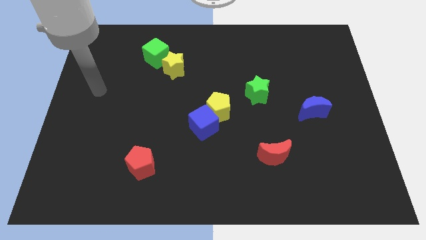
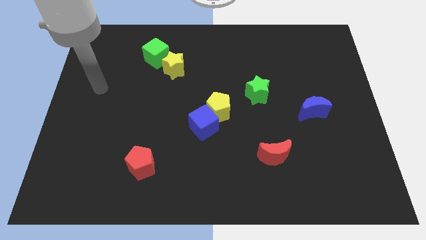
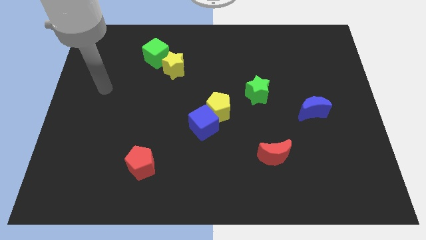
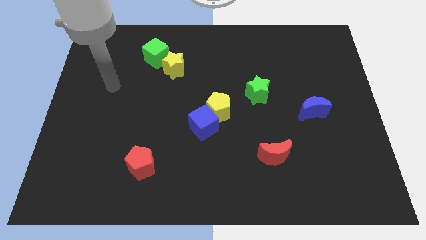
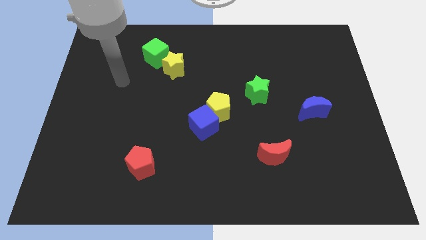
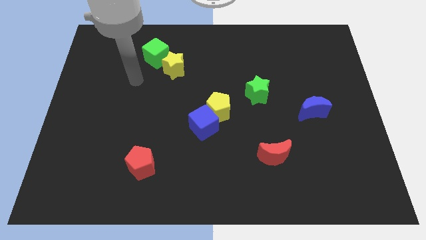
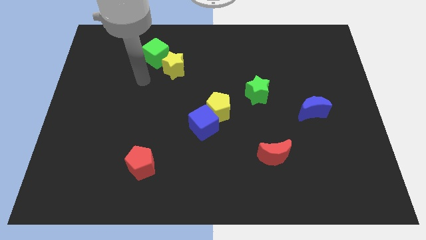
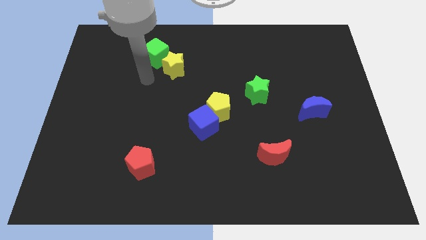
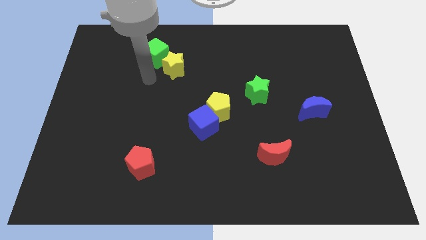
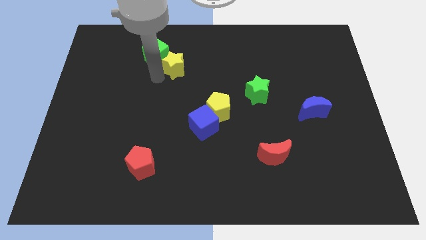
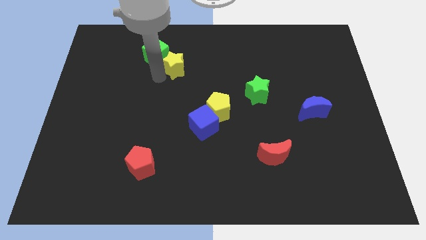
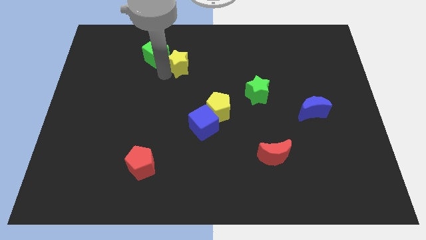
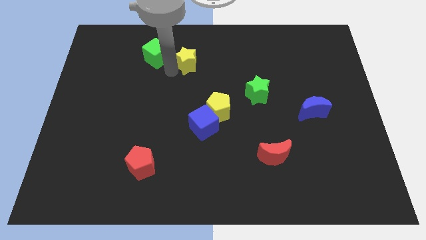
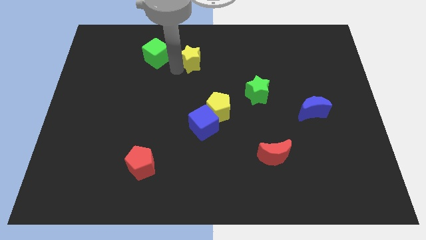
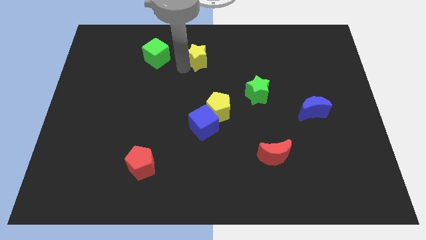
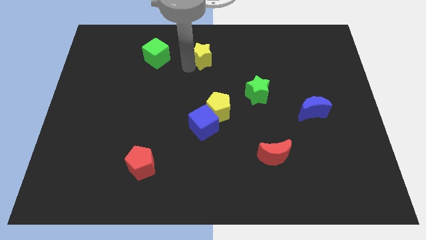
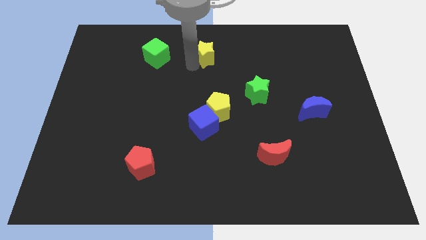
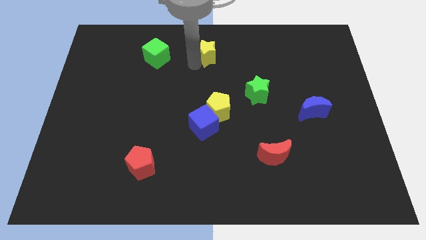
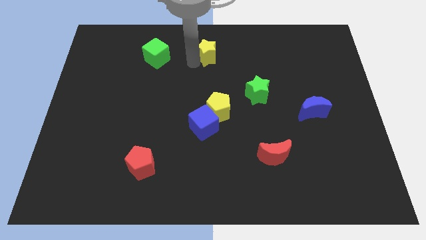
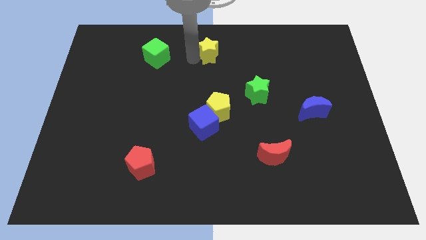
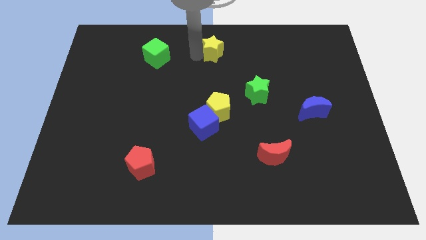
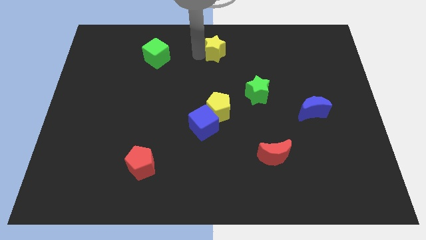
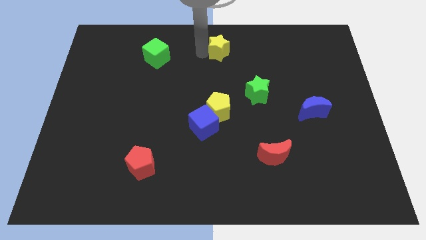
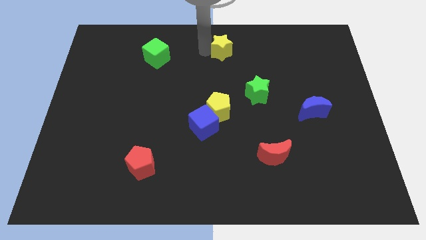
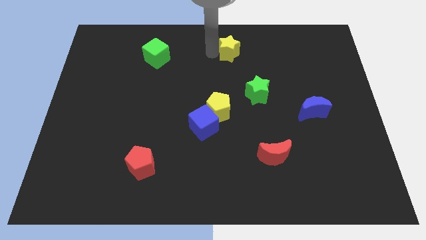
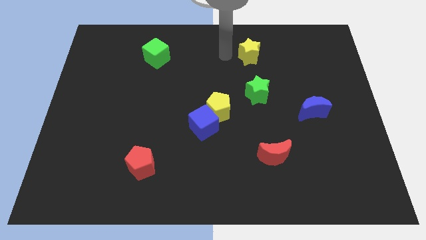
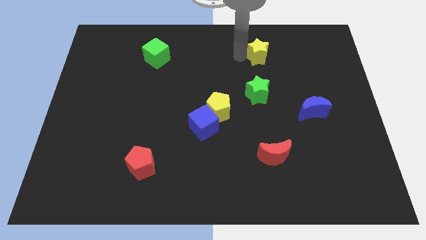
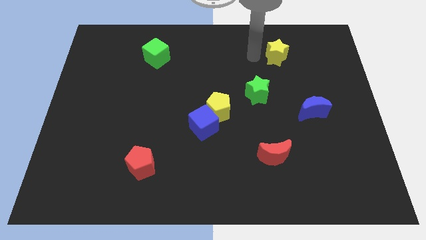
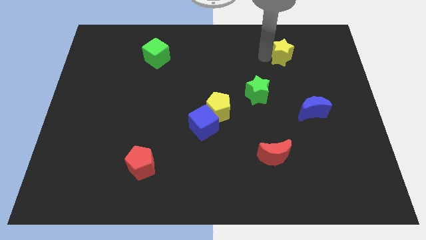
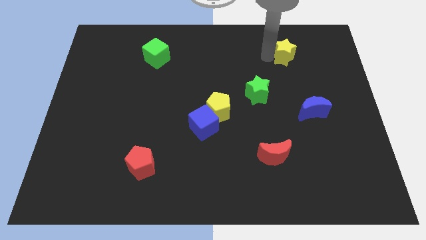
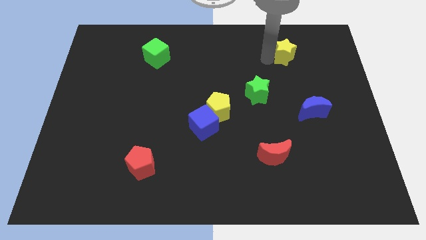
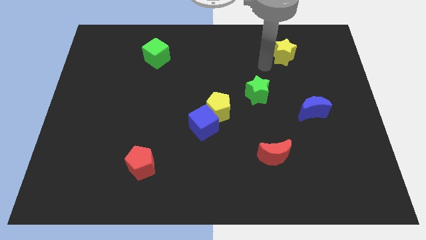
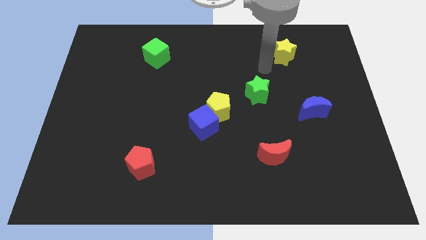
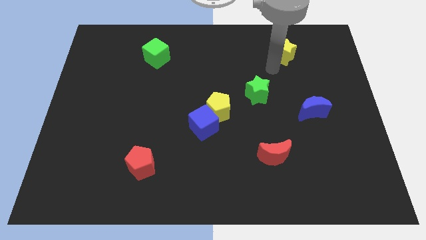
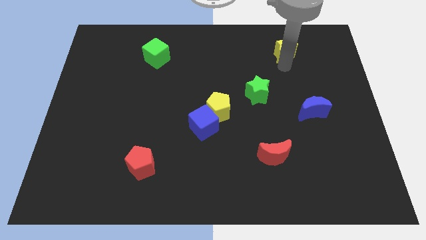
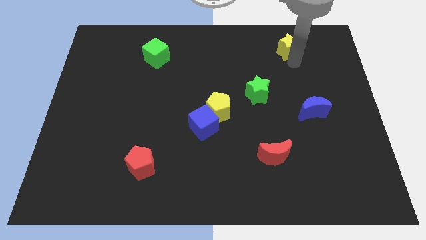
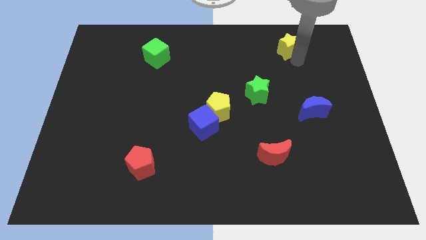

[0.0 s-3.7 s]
place the yellow star diagonally to green star

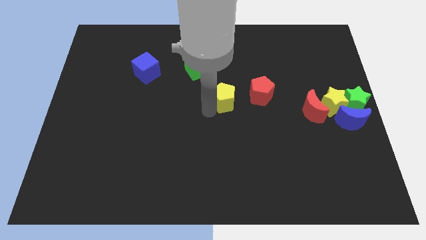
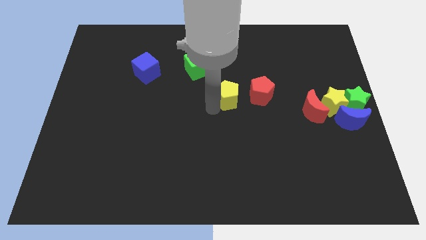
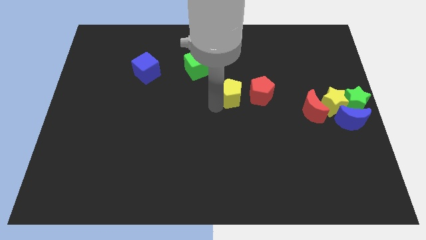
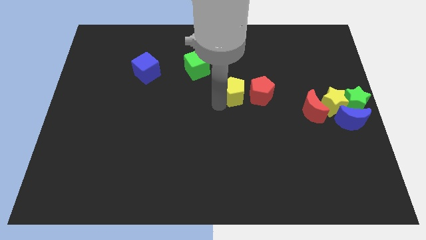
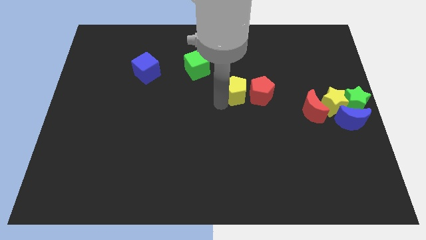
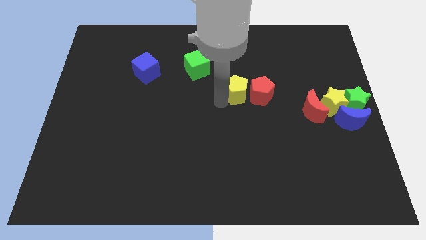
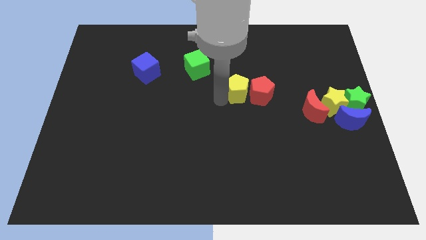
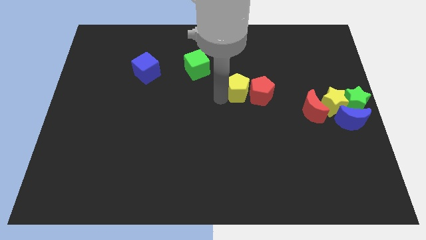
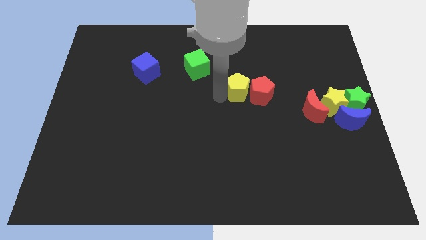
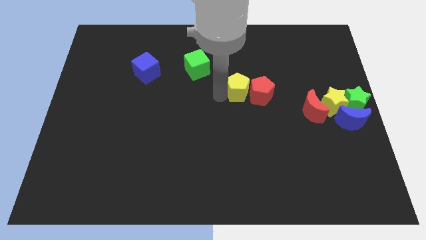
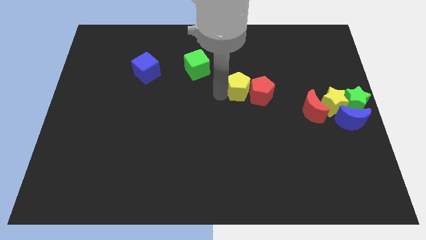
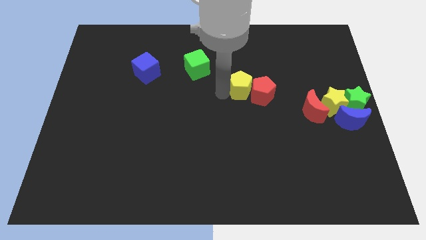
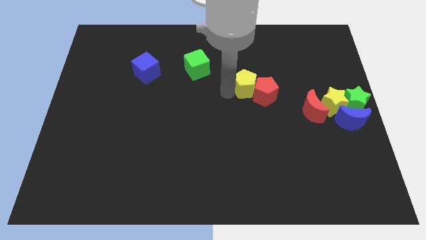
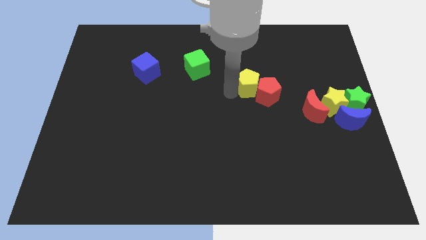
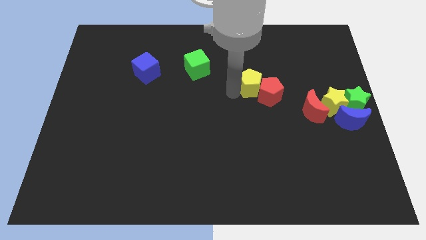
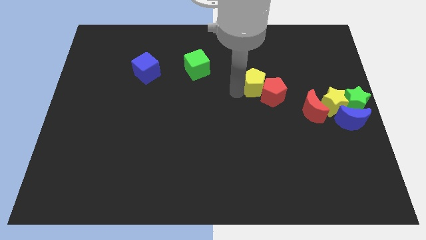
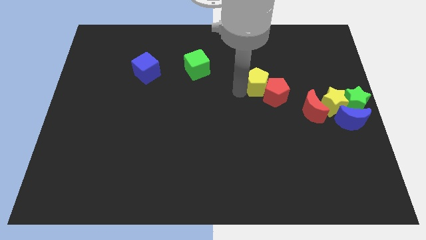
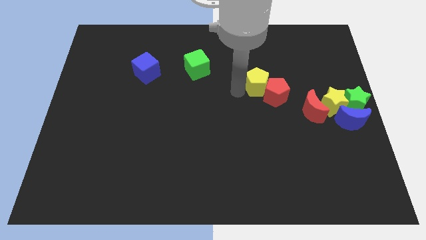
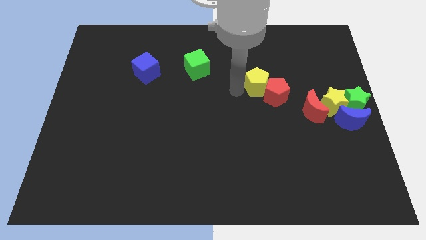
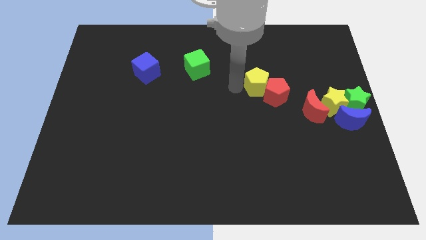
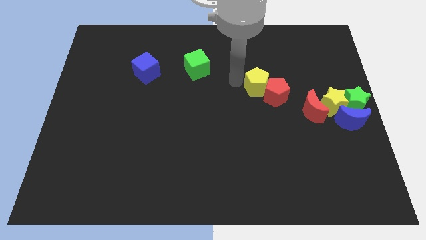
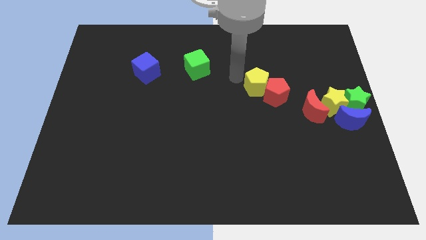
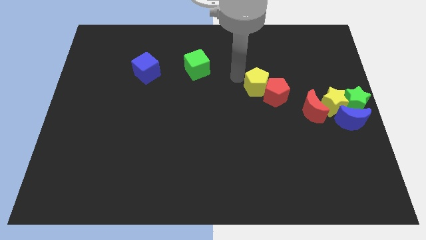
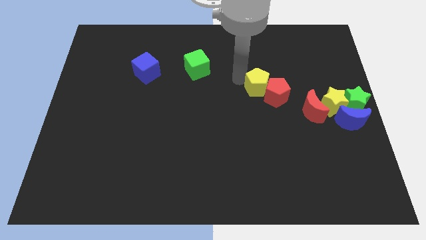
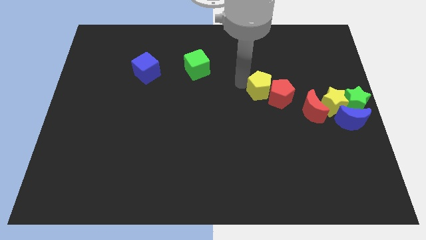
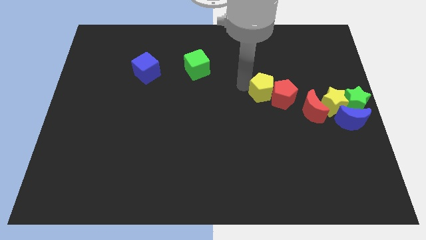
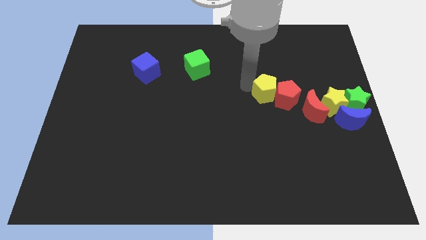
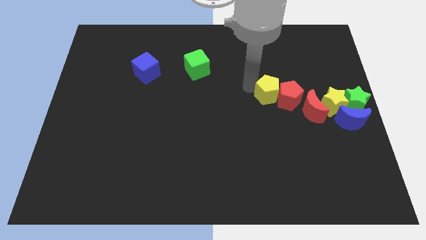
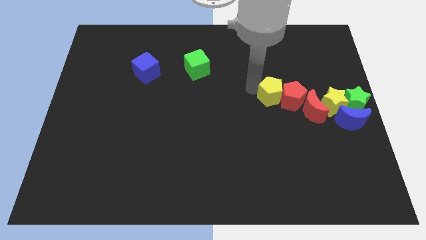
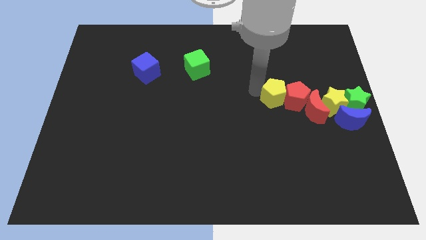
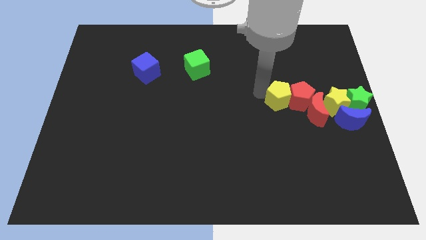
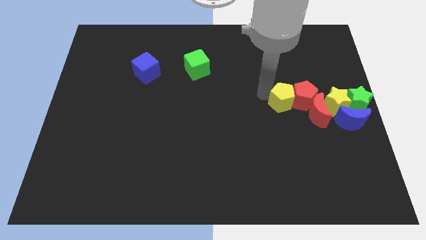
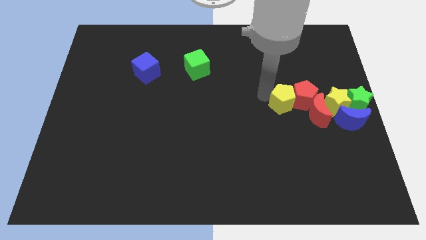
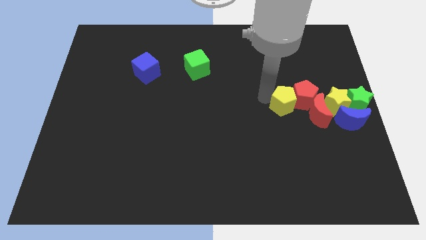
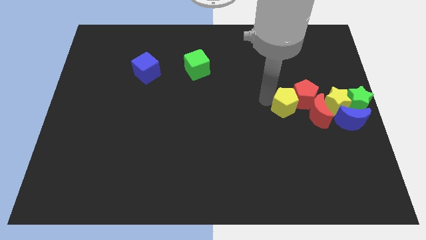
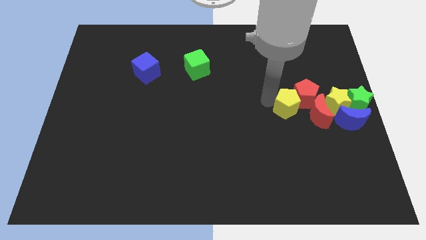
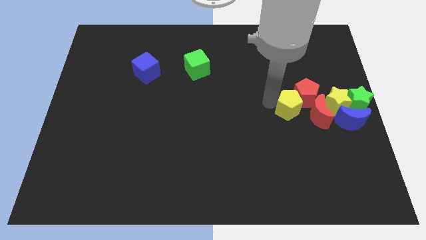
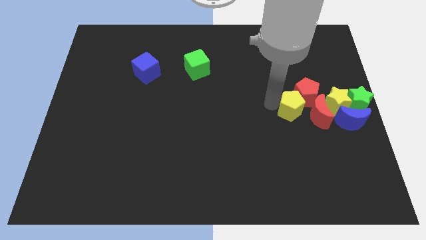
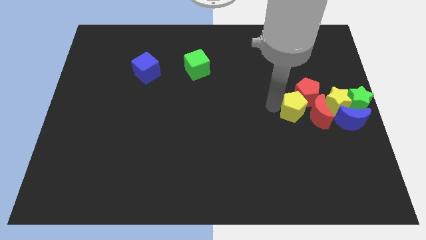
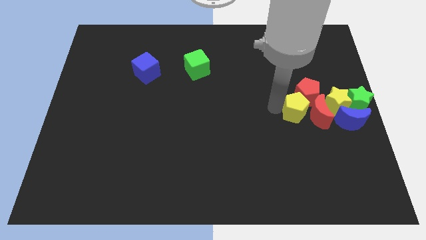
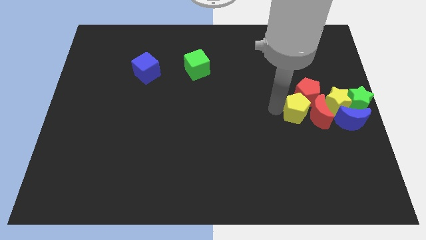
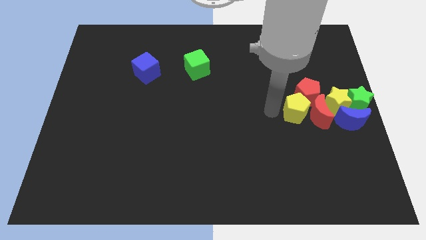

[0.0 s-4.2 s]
move the yellow pentagon into the red penatgon towards the group of blocks

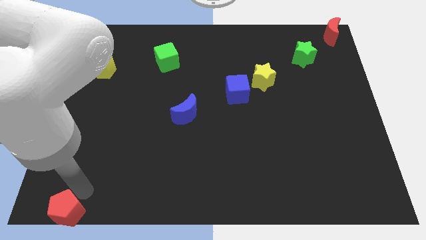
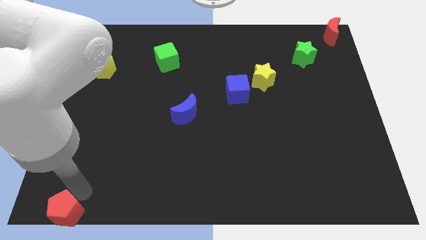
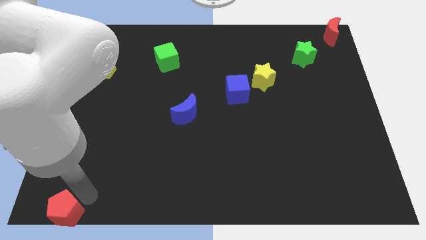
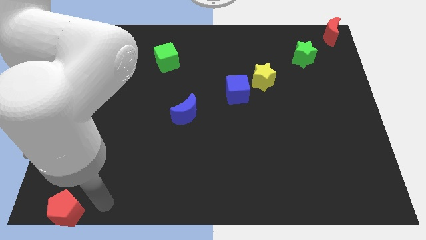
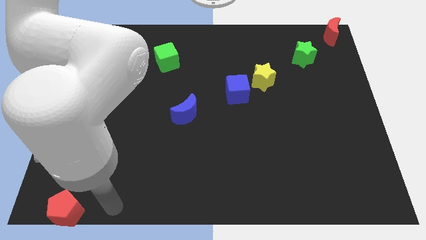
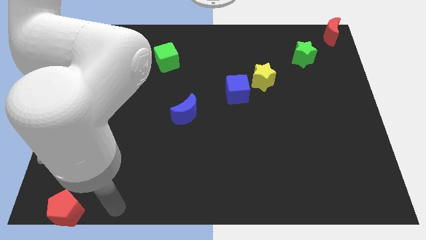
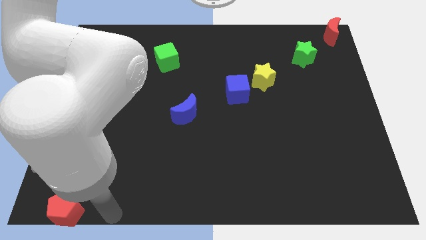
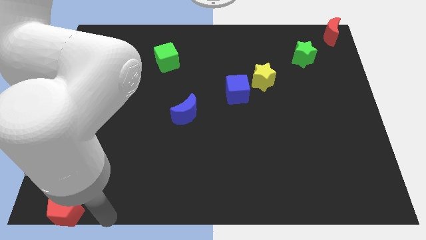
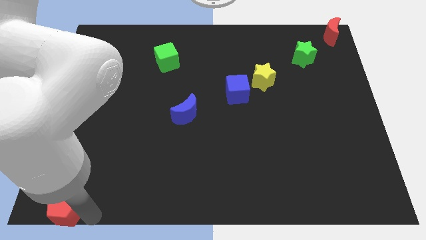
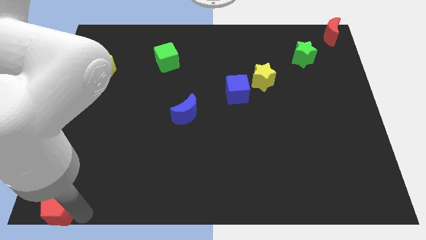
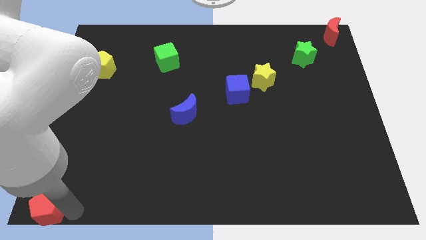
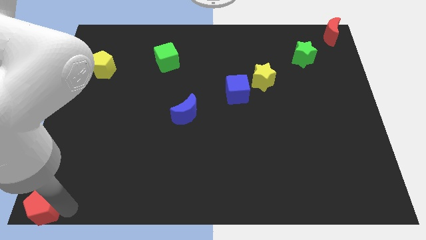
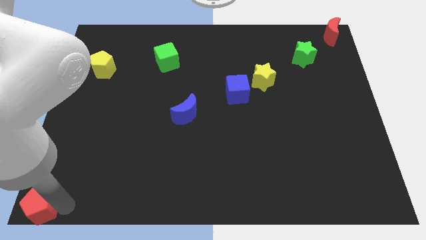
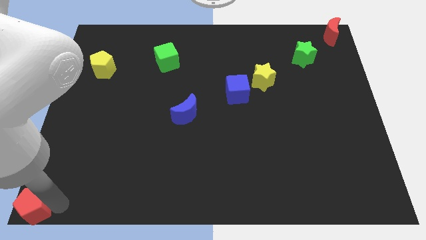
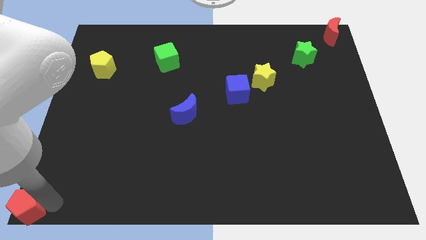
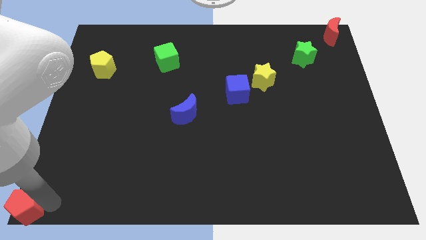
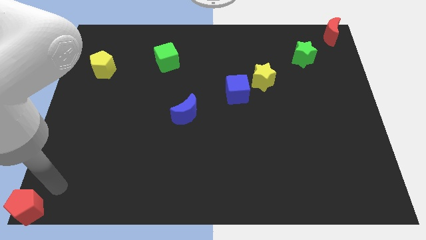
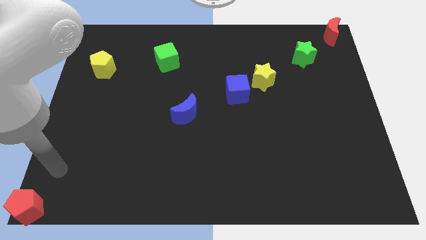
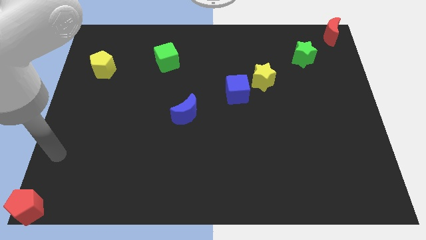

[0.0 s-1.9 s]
move the red pentagon to the left bottom of the board
